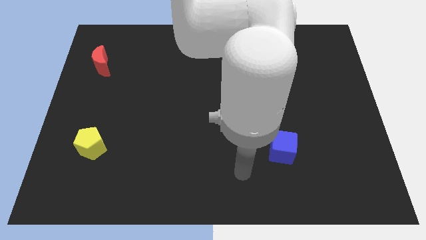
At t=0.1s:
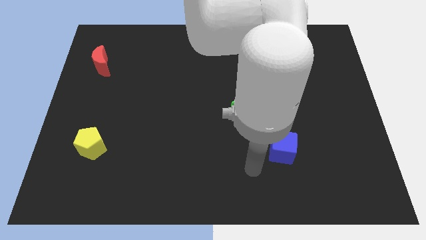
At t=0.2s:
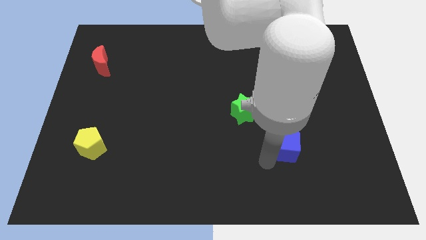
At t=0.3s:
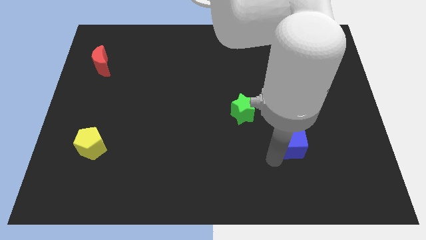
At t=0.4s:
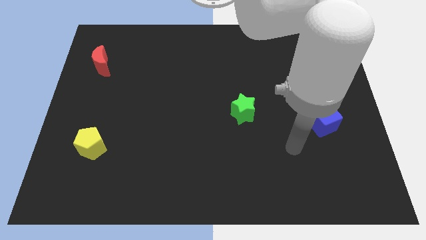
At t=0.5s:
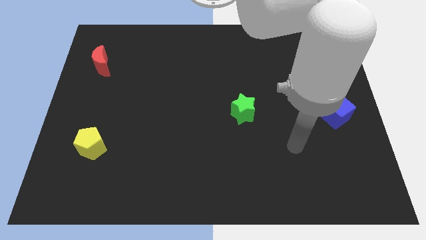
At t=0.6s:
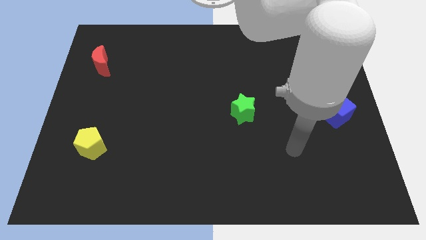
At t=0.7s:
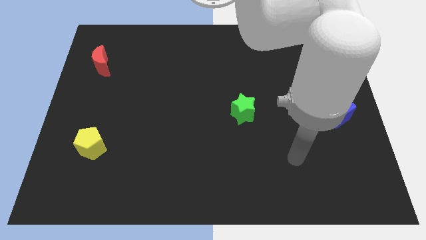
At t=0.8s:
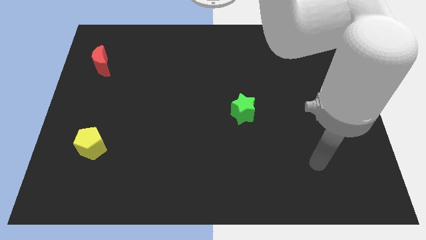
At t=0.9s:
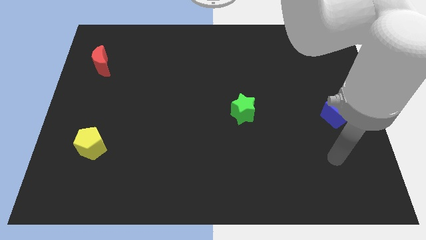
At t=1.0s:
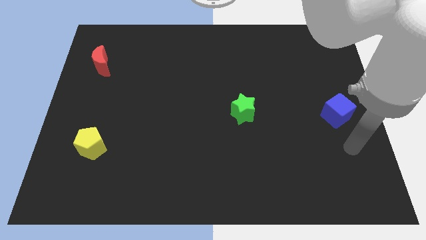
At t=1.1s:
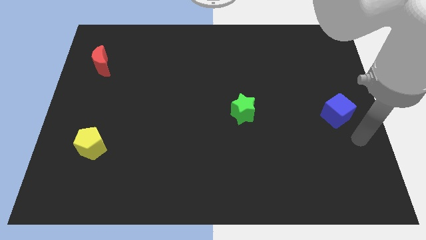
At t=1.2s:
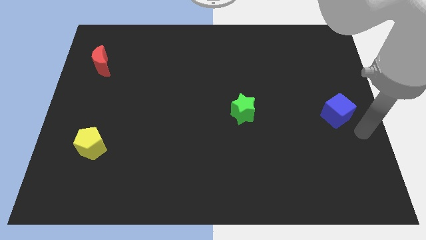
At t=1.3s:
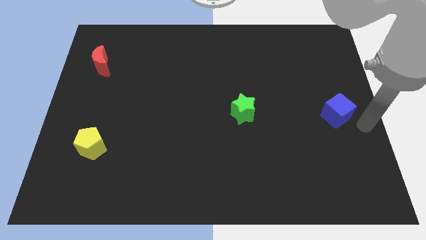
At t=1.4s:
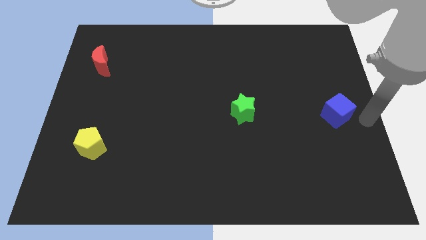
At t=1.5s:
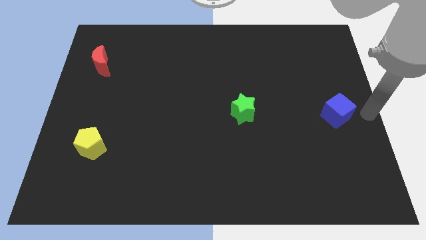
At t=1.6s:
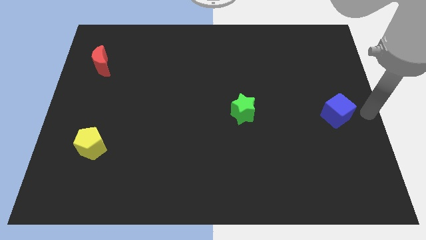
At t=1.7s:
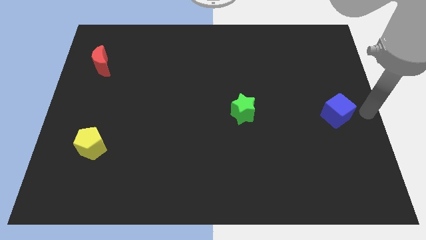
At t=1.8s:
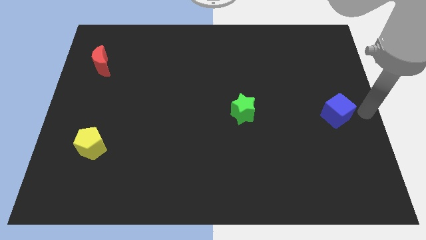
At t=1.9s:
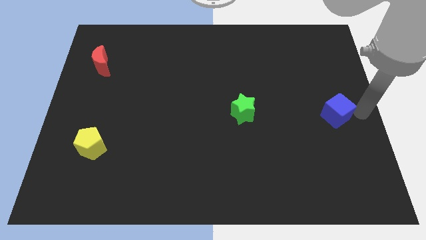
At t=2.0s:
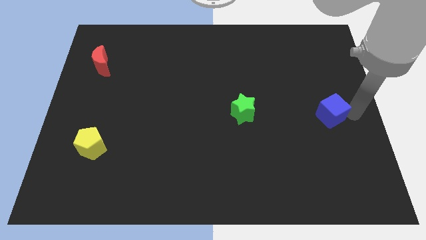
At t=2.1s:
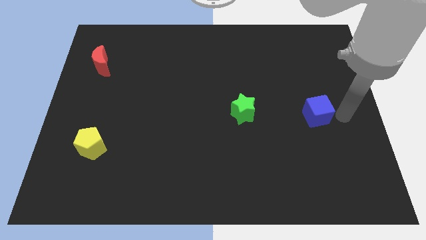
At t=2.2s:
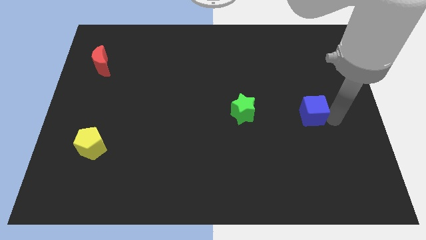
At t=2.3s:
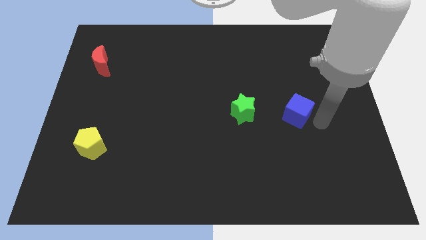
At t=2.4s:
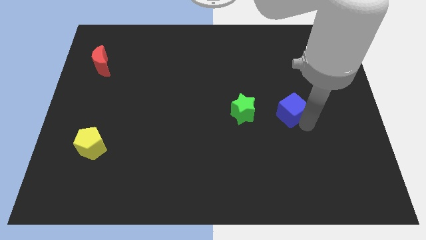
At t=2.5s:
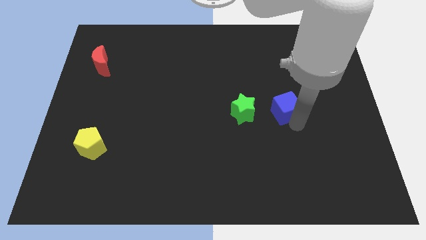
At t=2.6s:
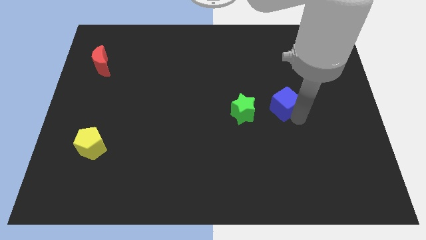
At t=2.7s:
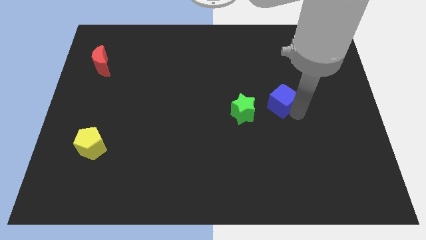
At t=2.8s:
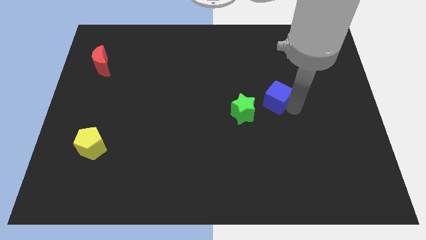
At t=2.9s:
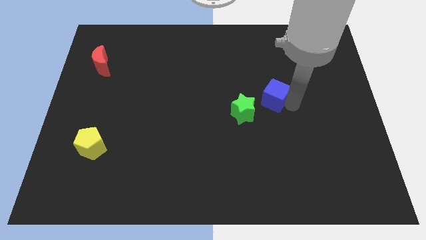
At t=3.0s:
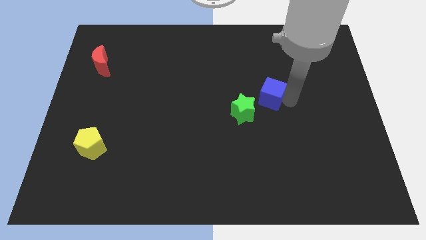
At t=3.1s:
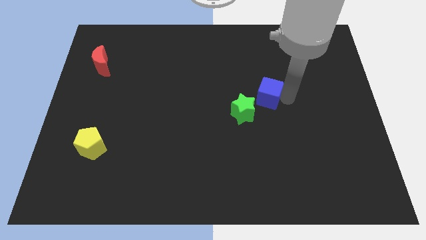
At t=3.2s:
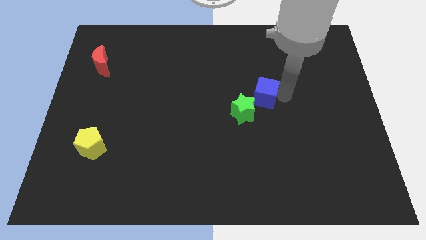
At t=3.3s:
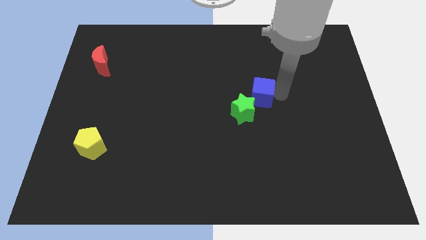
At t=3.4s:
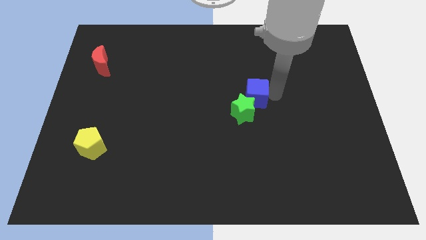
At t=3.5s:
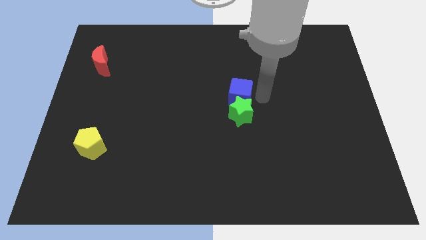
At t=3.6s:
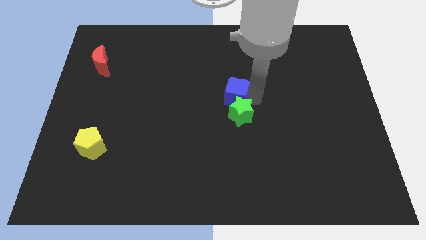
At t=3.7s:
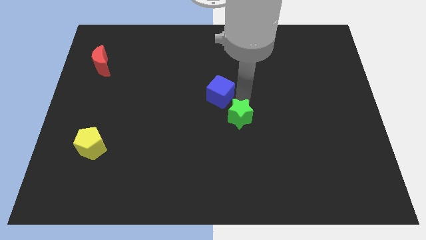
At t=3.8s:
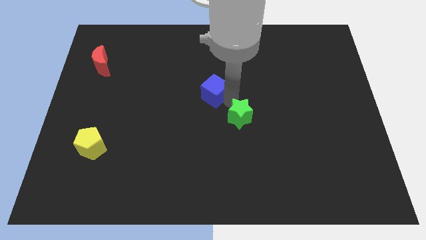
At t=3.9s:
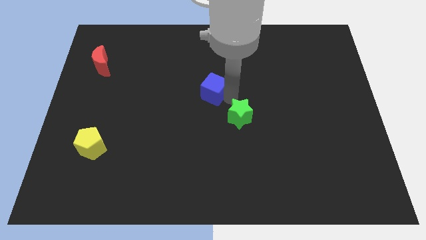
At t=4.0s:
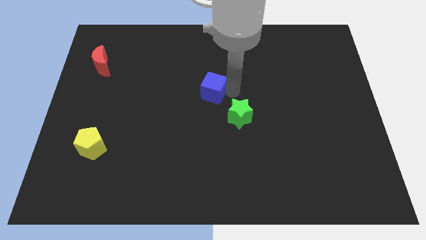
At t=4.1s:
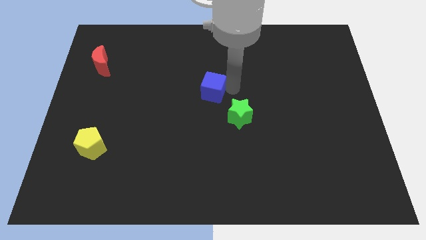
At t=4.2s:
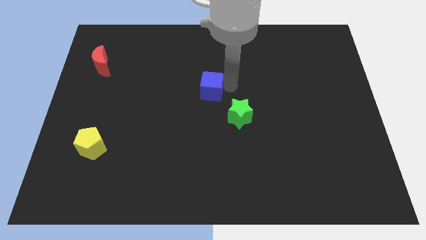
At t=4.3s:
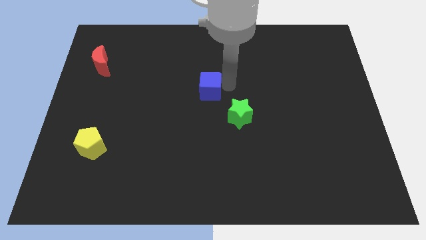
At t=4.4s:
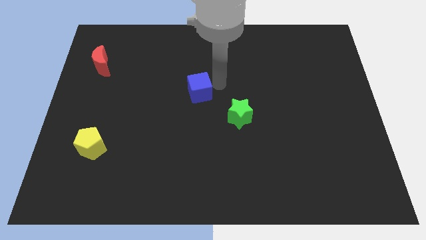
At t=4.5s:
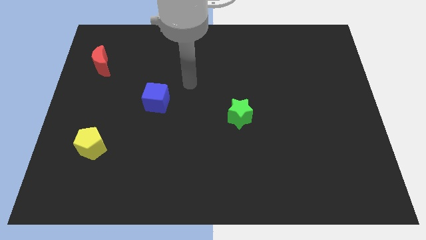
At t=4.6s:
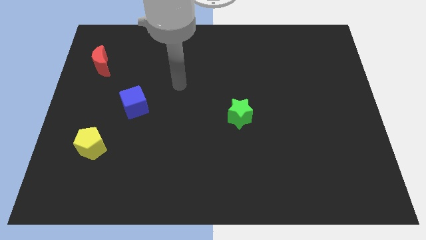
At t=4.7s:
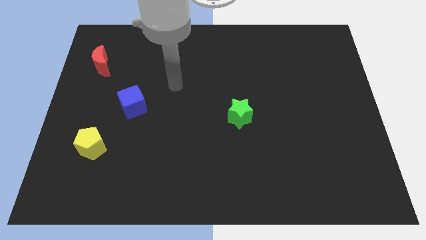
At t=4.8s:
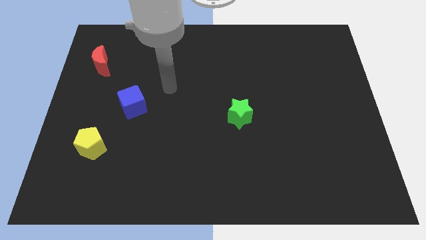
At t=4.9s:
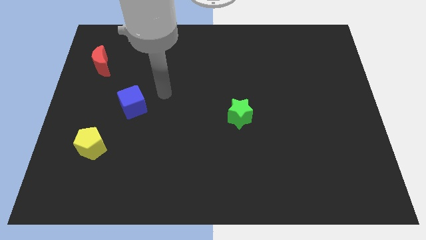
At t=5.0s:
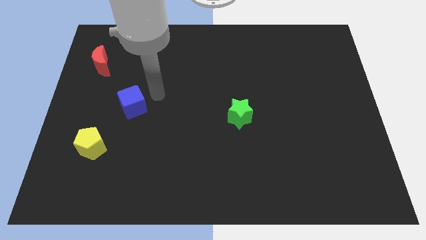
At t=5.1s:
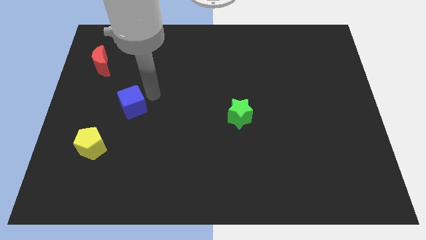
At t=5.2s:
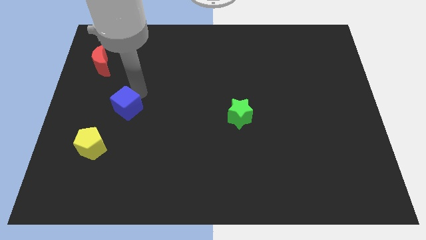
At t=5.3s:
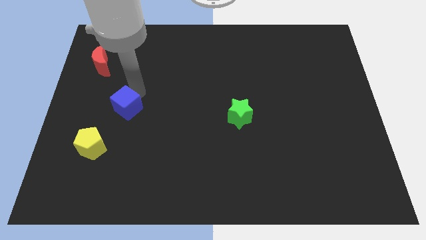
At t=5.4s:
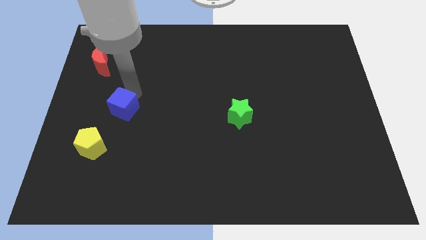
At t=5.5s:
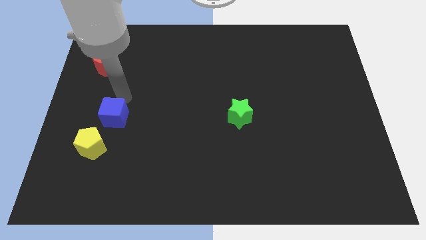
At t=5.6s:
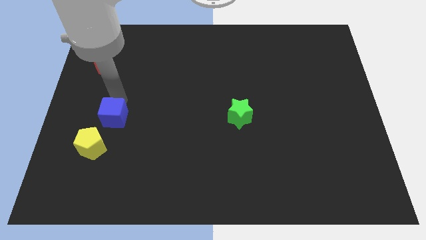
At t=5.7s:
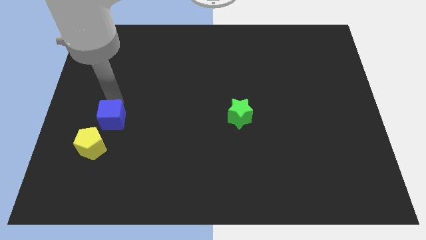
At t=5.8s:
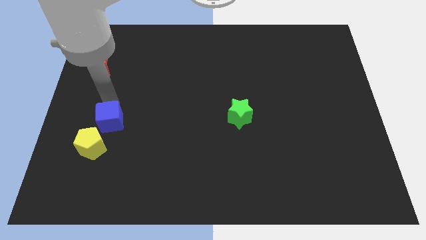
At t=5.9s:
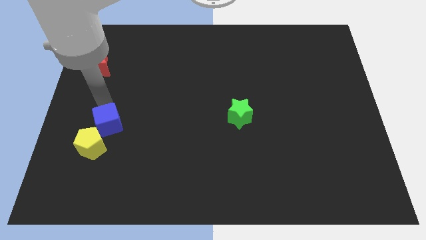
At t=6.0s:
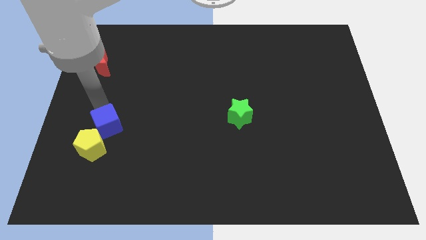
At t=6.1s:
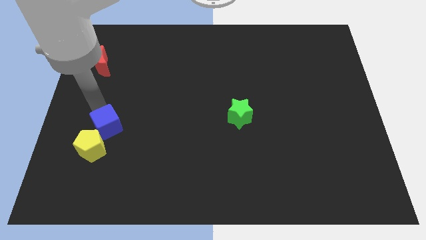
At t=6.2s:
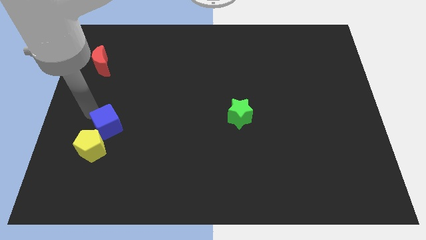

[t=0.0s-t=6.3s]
slide the cube close to the yellow pentagon

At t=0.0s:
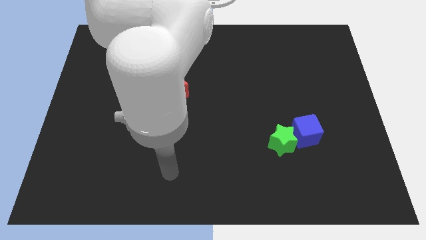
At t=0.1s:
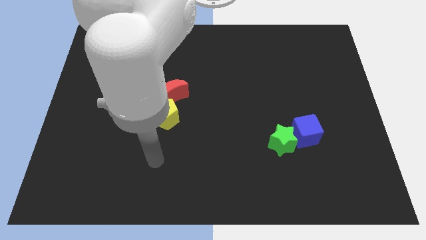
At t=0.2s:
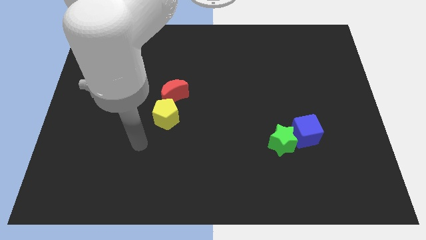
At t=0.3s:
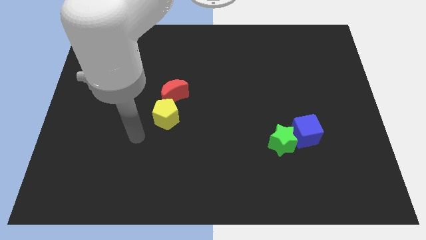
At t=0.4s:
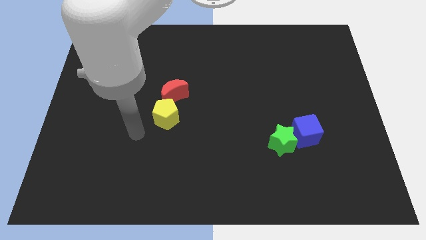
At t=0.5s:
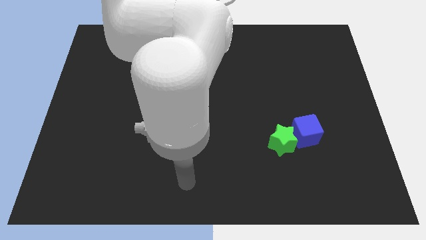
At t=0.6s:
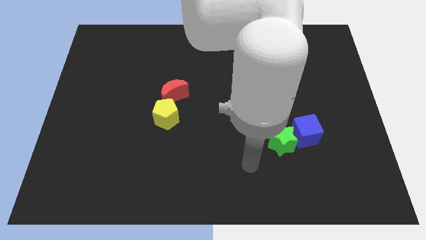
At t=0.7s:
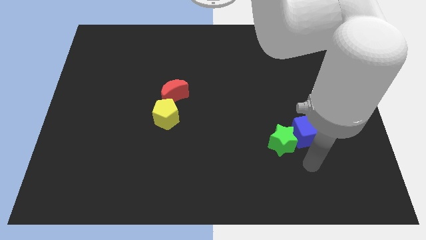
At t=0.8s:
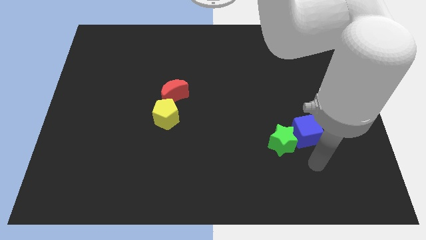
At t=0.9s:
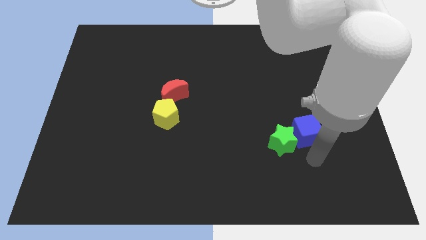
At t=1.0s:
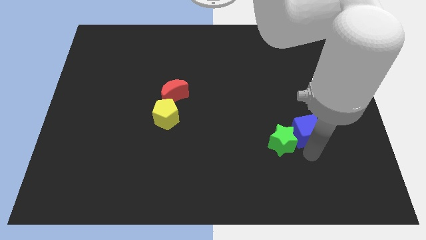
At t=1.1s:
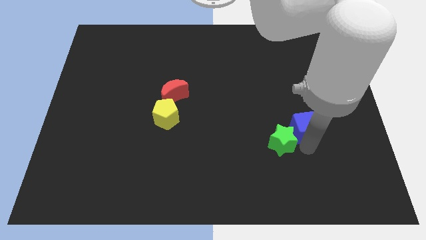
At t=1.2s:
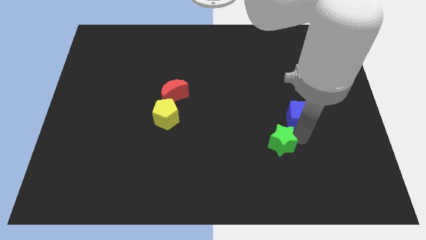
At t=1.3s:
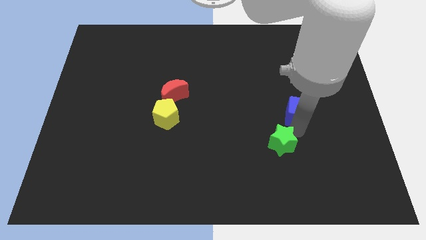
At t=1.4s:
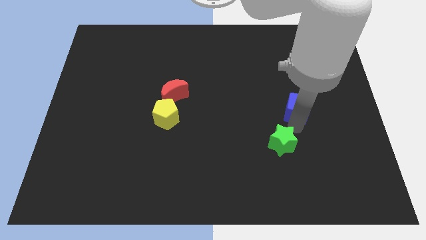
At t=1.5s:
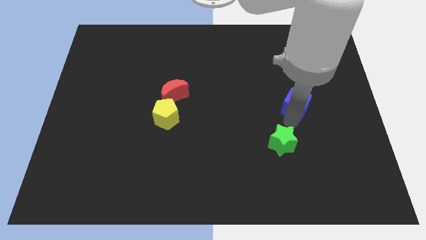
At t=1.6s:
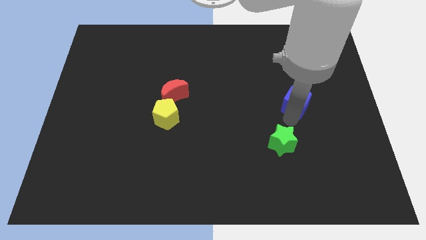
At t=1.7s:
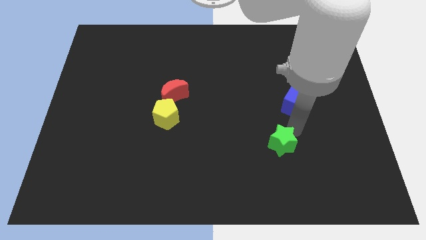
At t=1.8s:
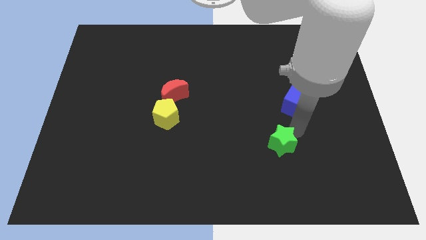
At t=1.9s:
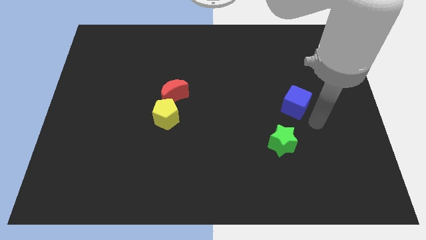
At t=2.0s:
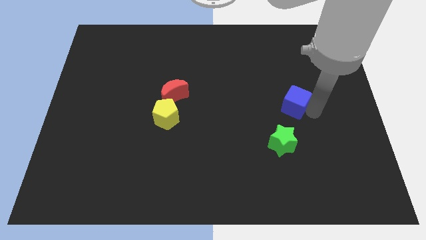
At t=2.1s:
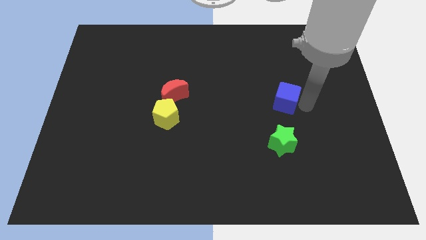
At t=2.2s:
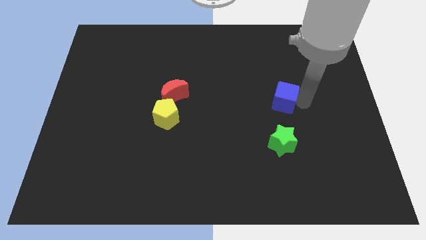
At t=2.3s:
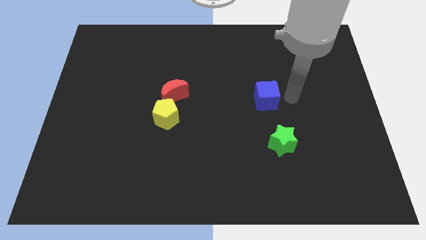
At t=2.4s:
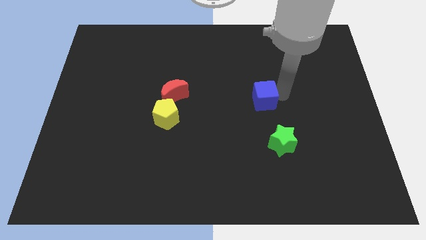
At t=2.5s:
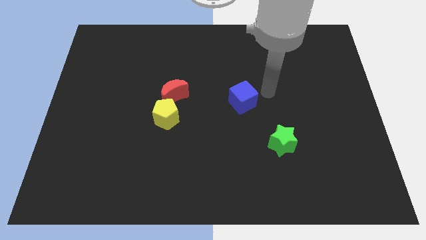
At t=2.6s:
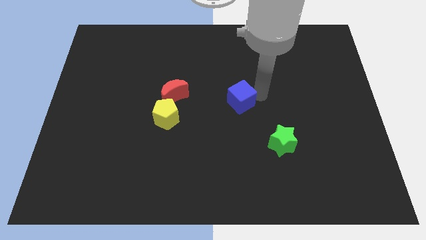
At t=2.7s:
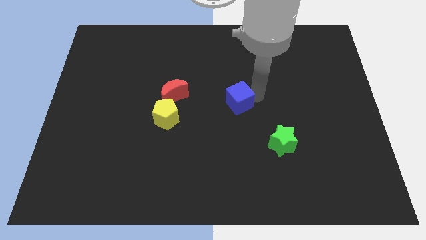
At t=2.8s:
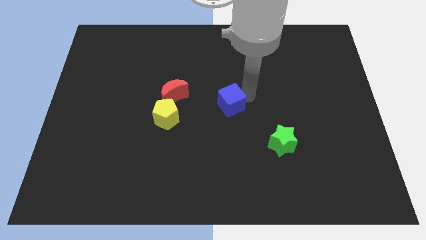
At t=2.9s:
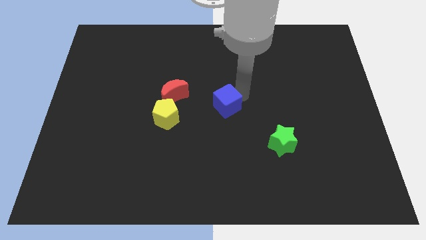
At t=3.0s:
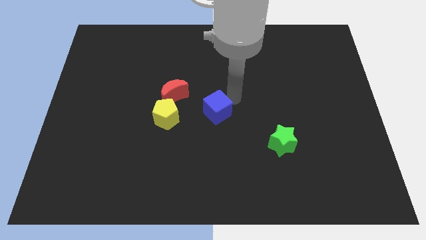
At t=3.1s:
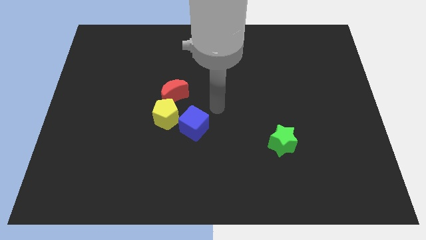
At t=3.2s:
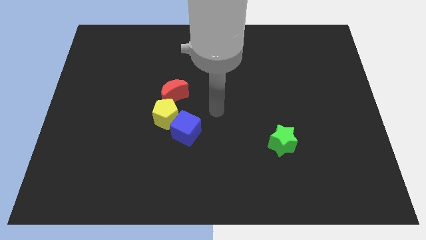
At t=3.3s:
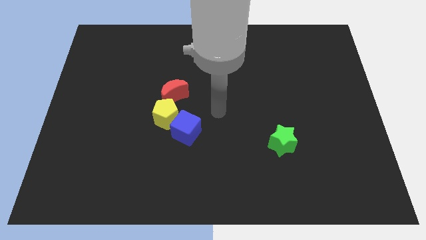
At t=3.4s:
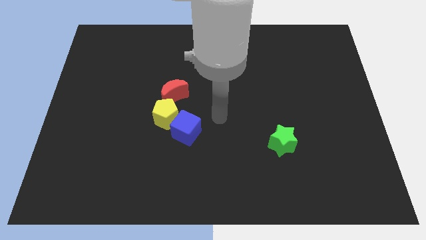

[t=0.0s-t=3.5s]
put the cube close to the pentagon
